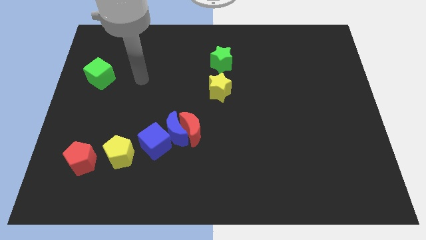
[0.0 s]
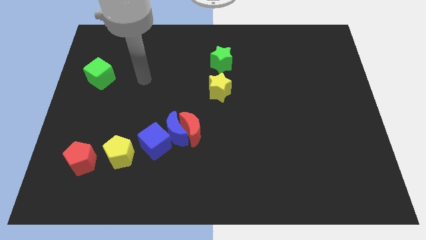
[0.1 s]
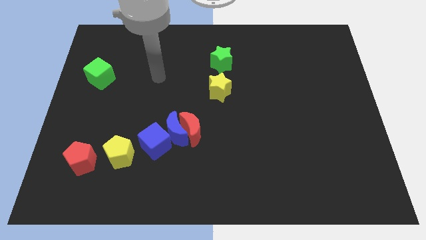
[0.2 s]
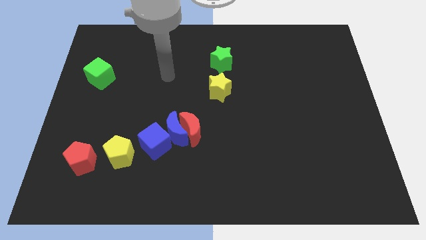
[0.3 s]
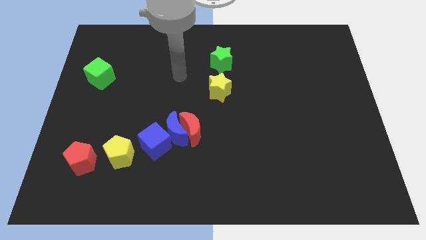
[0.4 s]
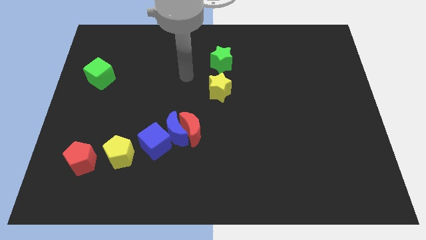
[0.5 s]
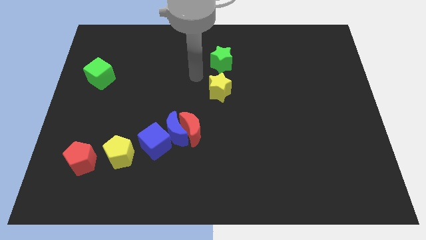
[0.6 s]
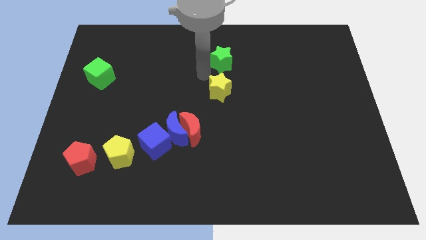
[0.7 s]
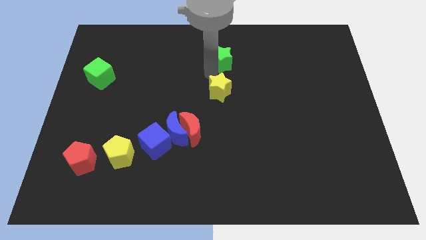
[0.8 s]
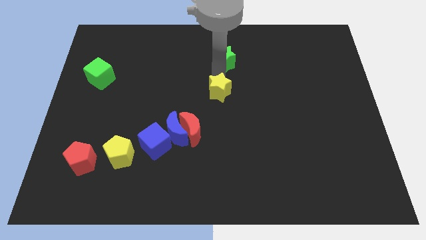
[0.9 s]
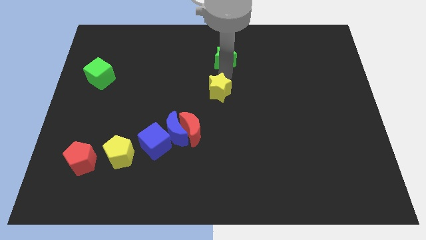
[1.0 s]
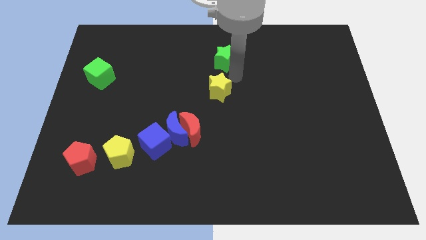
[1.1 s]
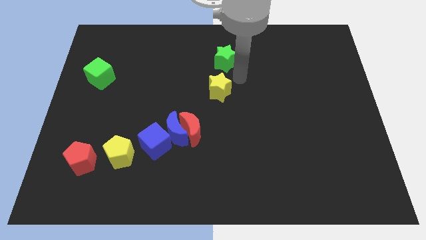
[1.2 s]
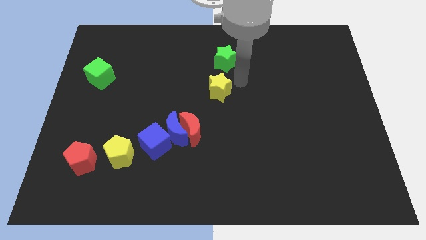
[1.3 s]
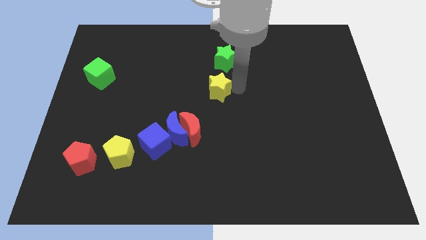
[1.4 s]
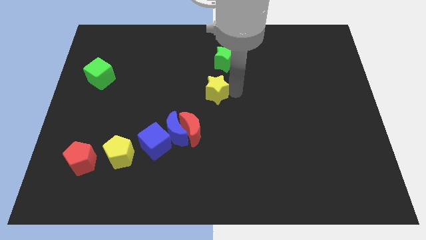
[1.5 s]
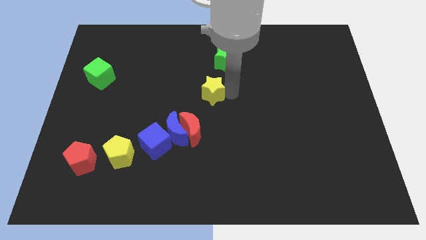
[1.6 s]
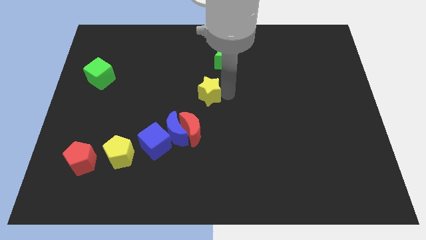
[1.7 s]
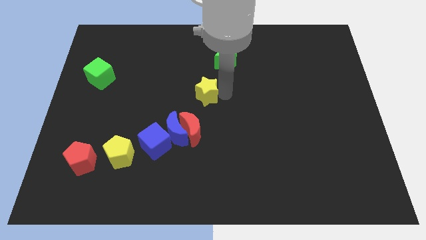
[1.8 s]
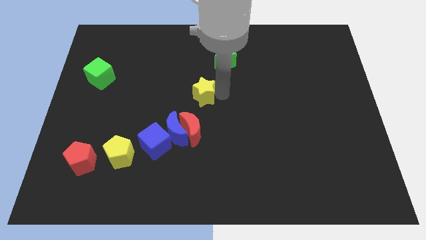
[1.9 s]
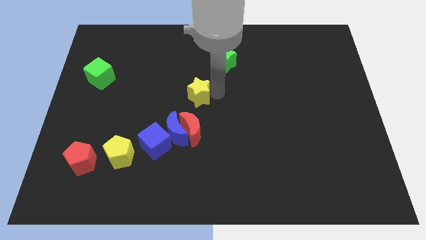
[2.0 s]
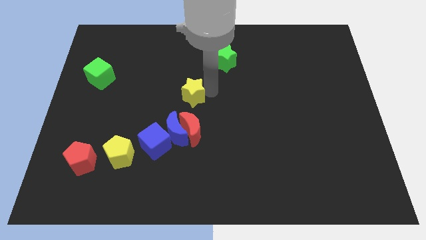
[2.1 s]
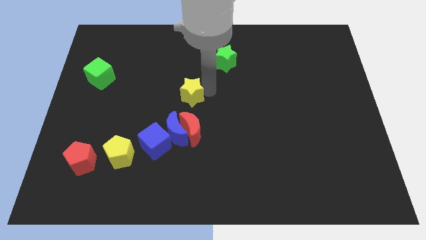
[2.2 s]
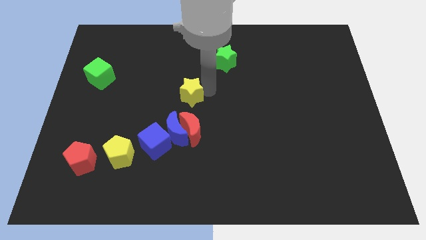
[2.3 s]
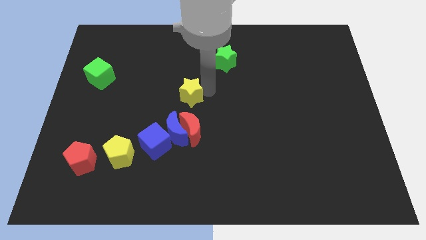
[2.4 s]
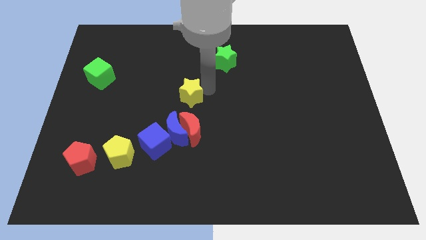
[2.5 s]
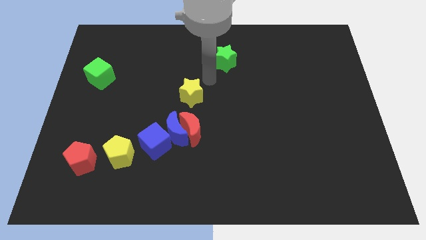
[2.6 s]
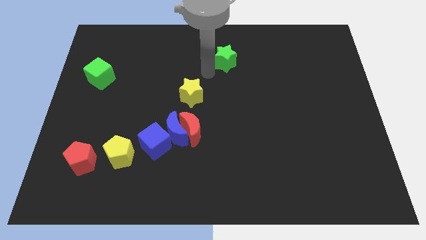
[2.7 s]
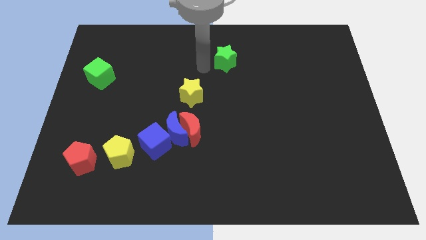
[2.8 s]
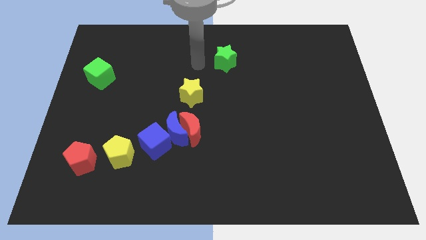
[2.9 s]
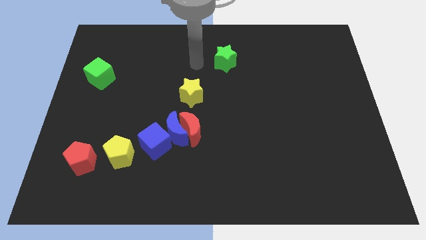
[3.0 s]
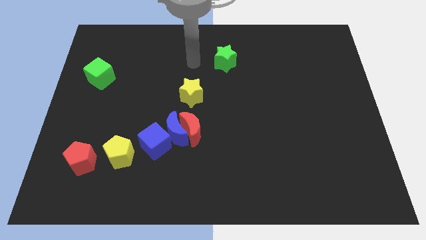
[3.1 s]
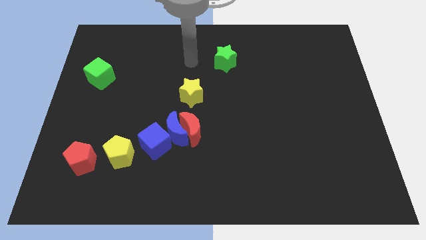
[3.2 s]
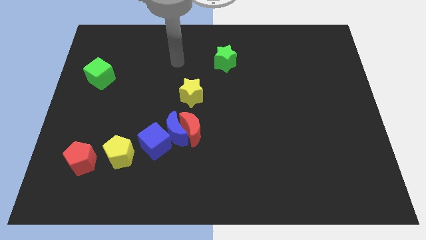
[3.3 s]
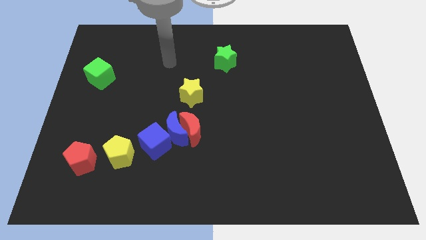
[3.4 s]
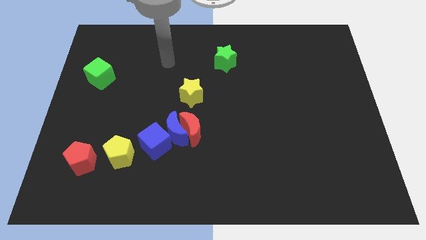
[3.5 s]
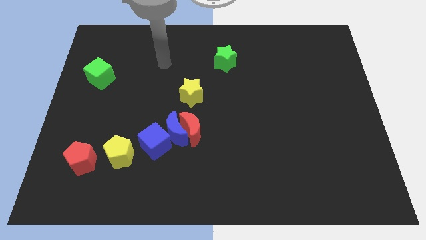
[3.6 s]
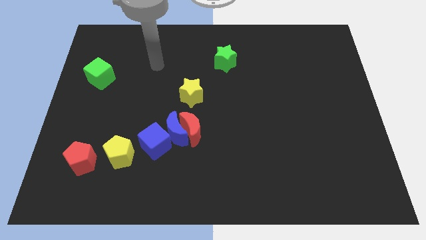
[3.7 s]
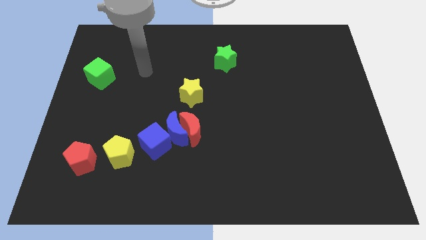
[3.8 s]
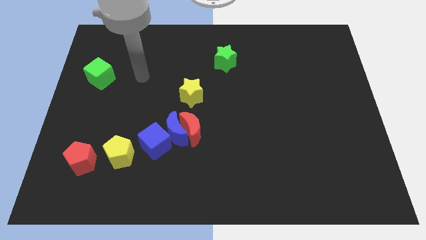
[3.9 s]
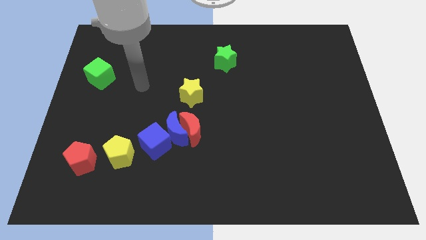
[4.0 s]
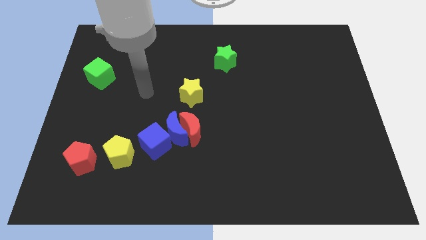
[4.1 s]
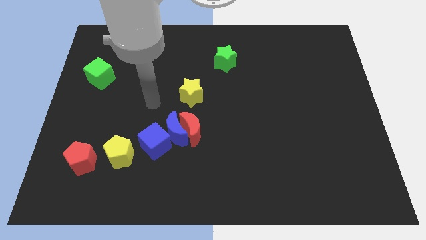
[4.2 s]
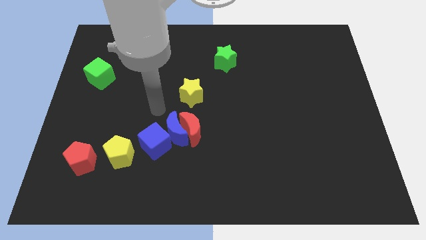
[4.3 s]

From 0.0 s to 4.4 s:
move the yellow star diagonally to the green star

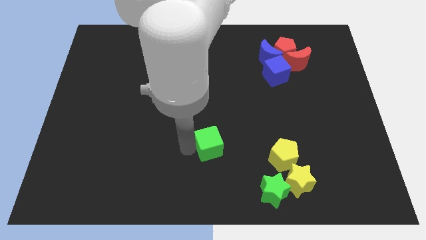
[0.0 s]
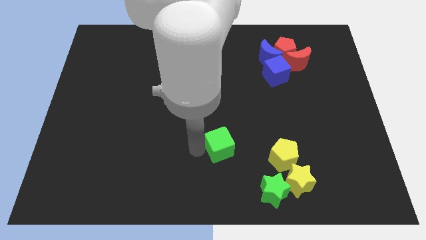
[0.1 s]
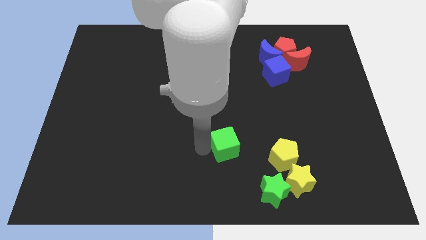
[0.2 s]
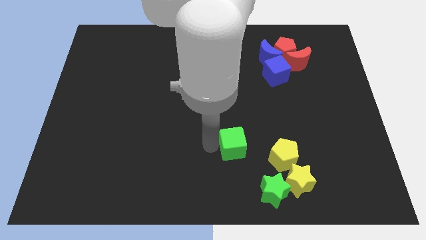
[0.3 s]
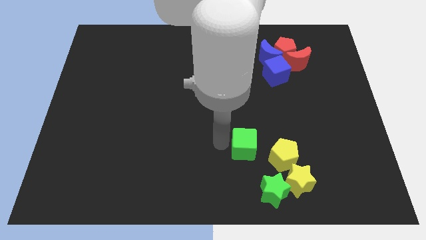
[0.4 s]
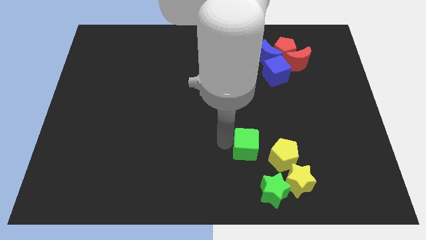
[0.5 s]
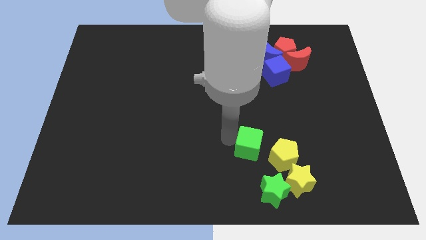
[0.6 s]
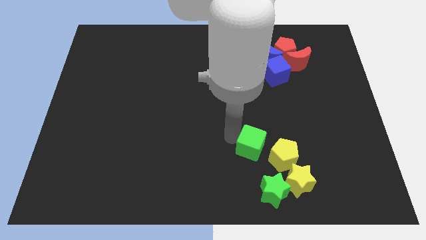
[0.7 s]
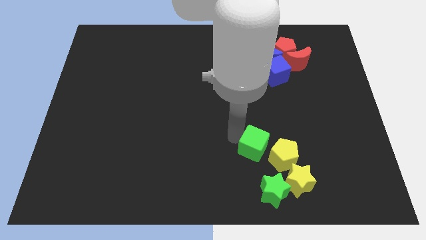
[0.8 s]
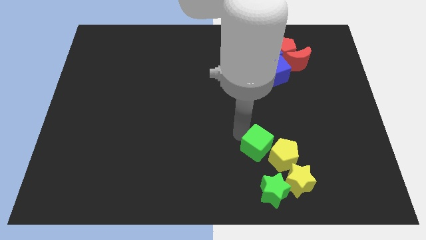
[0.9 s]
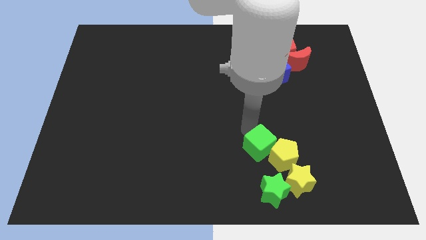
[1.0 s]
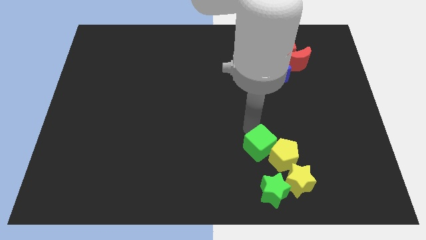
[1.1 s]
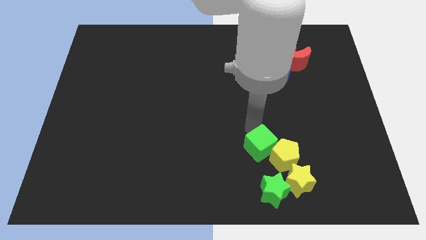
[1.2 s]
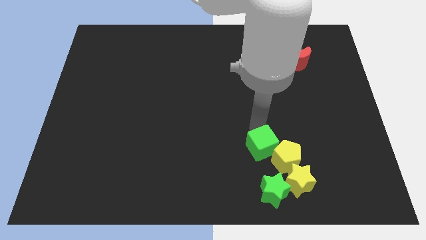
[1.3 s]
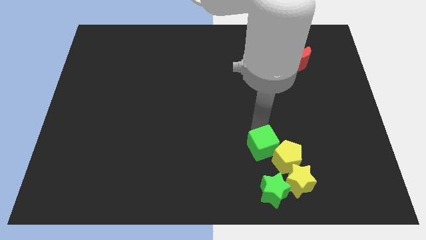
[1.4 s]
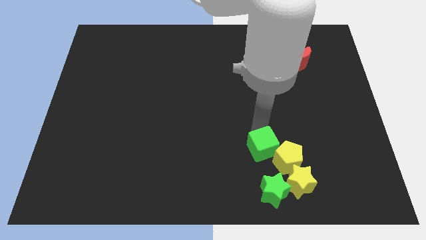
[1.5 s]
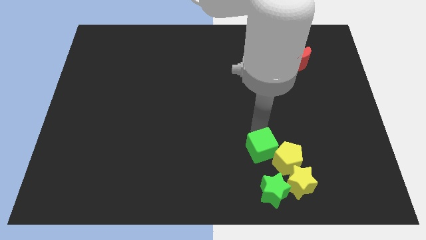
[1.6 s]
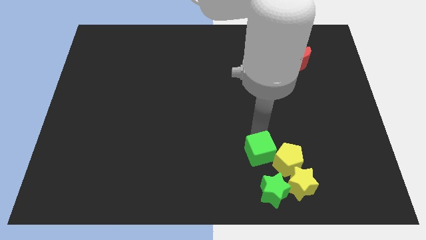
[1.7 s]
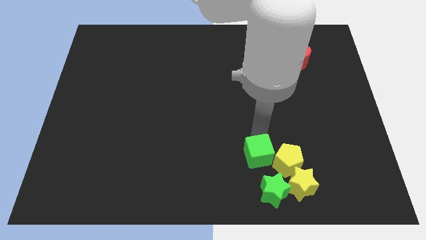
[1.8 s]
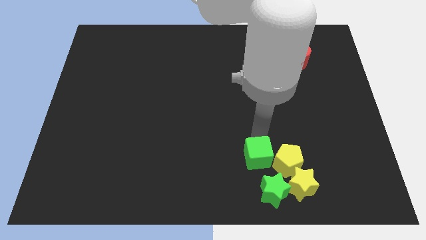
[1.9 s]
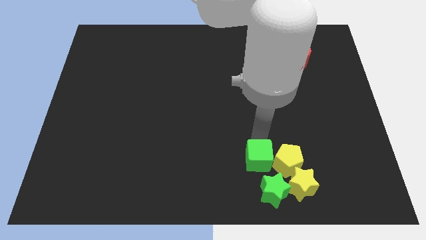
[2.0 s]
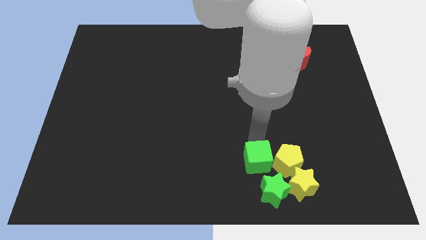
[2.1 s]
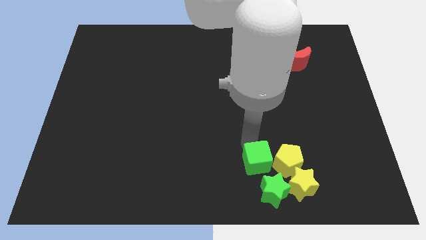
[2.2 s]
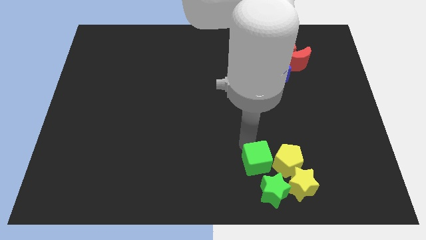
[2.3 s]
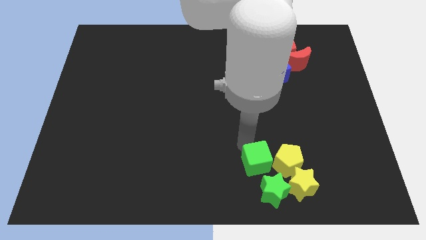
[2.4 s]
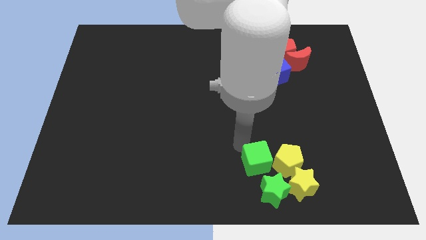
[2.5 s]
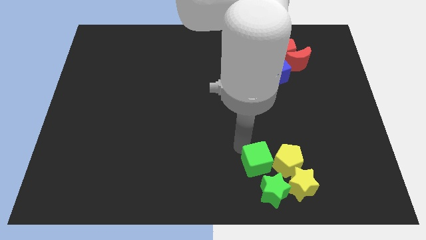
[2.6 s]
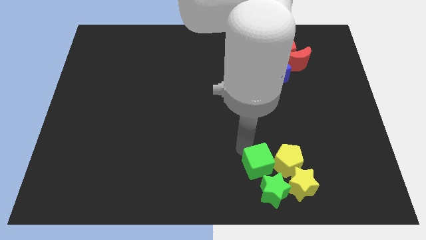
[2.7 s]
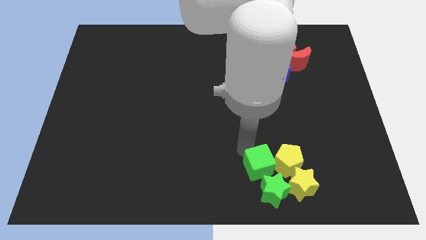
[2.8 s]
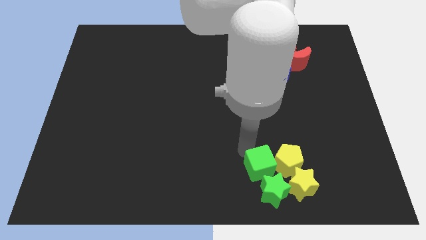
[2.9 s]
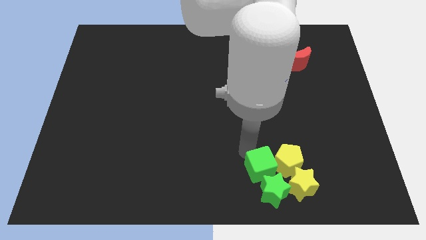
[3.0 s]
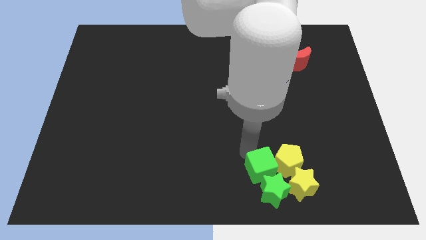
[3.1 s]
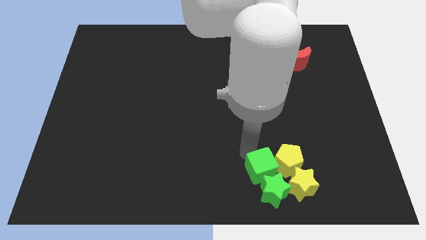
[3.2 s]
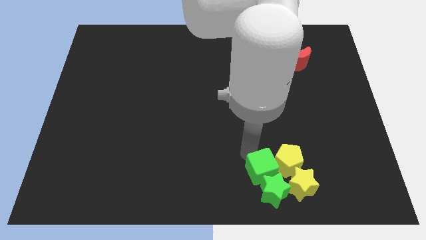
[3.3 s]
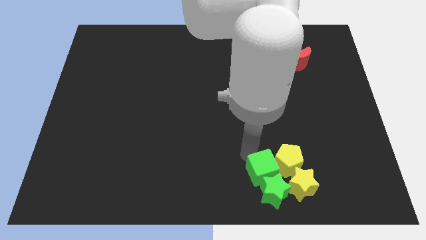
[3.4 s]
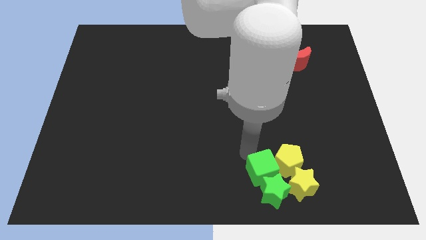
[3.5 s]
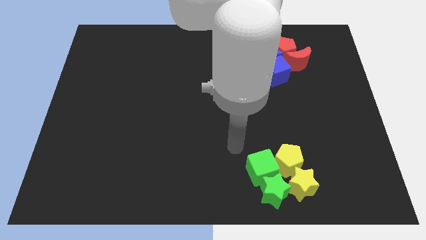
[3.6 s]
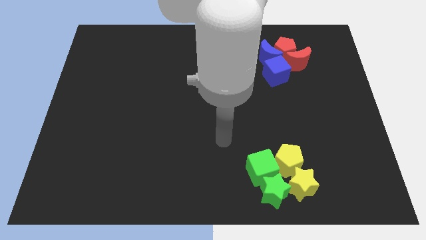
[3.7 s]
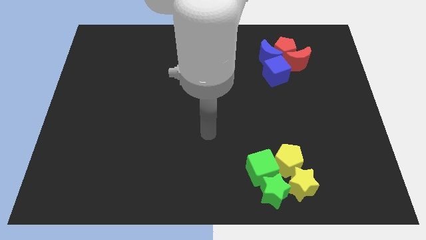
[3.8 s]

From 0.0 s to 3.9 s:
place the green cube into the group of yellow and green blocks

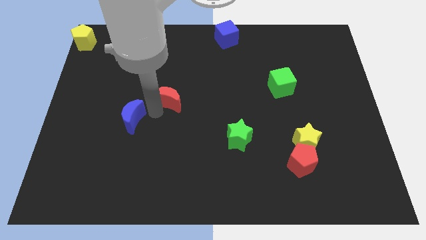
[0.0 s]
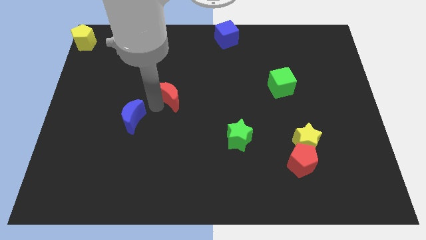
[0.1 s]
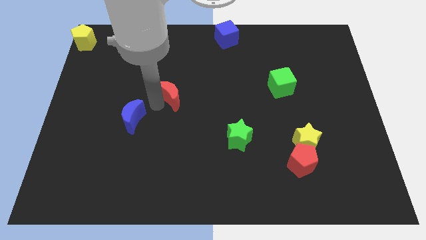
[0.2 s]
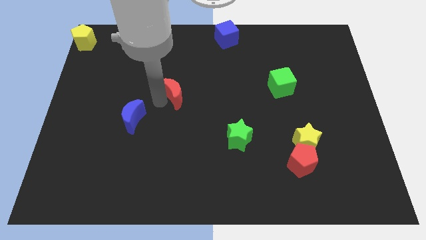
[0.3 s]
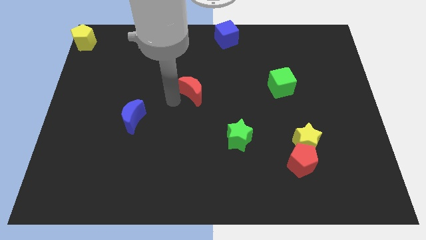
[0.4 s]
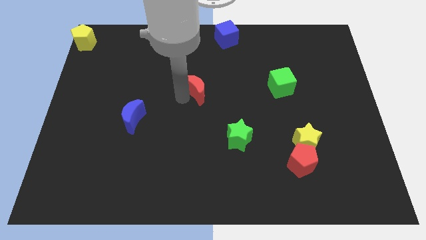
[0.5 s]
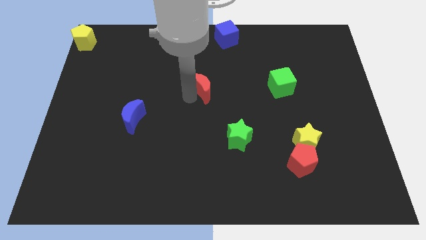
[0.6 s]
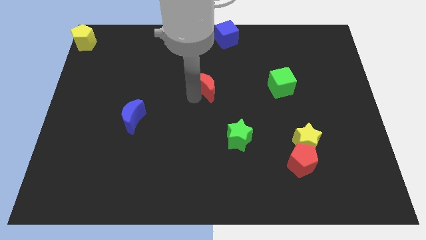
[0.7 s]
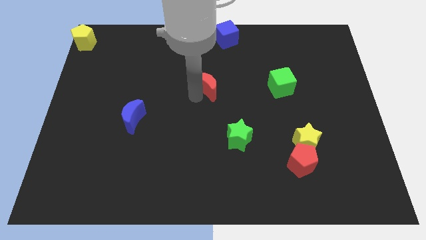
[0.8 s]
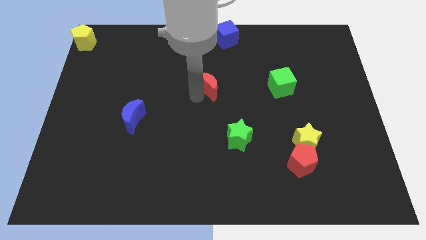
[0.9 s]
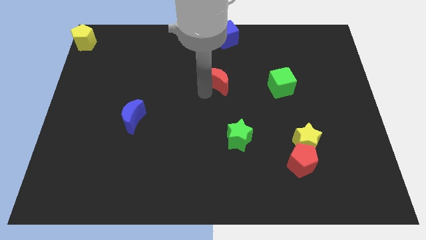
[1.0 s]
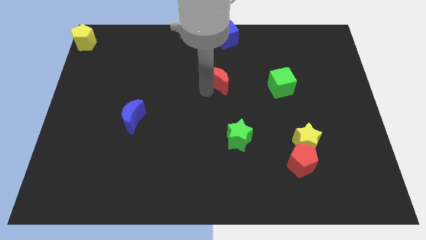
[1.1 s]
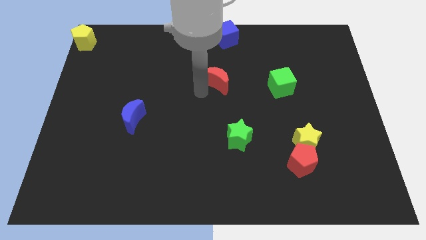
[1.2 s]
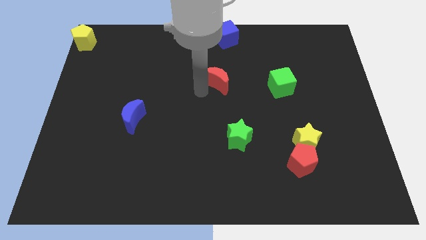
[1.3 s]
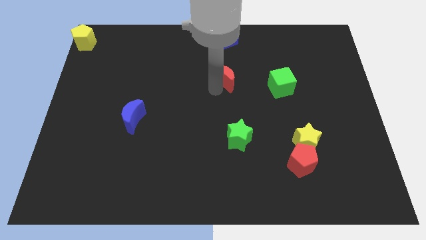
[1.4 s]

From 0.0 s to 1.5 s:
place red moon parallel to green cube
